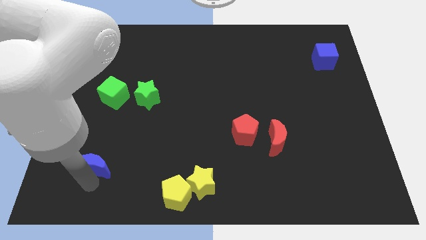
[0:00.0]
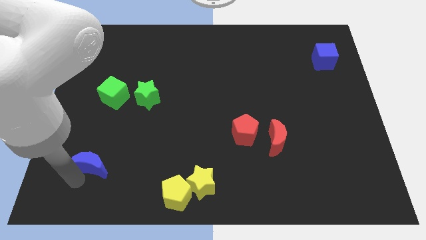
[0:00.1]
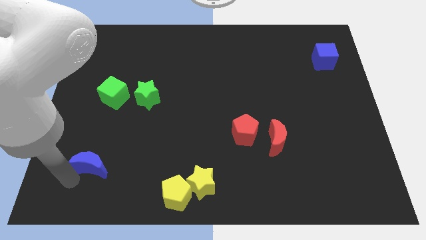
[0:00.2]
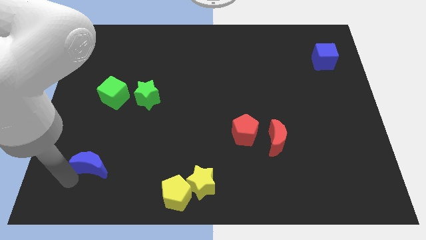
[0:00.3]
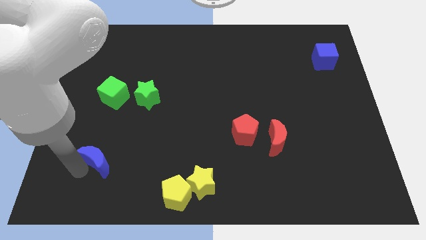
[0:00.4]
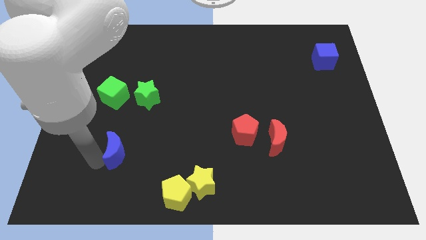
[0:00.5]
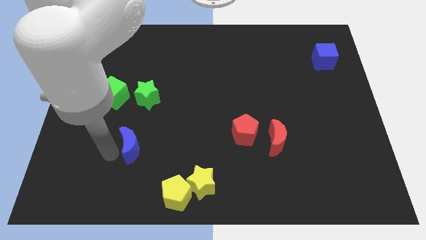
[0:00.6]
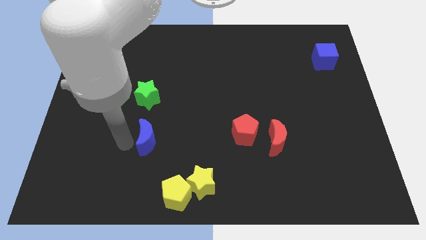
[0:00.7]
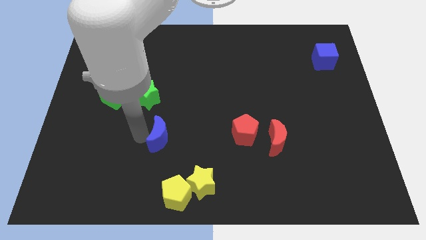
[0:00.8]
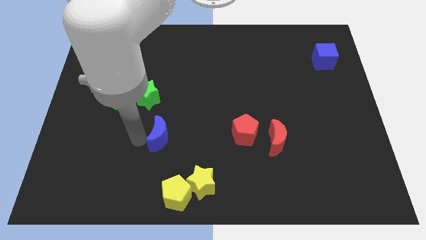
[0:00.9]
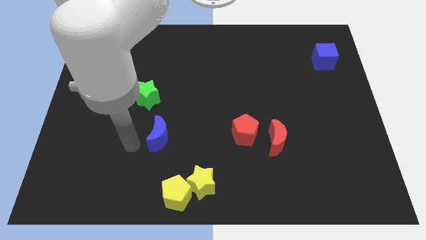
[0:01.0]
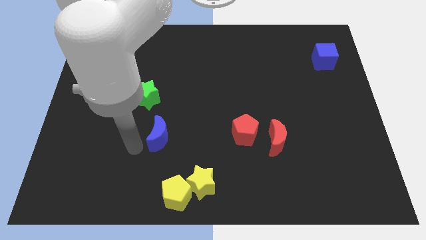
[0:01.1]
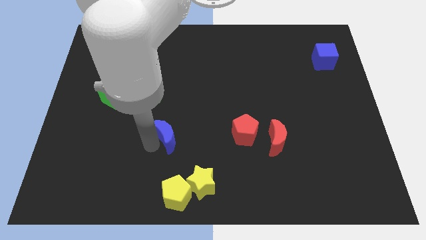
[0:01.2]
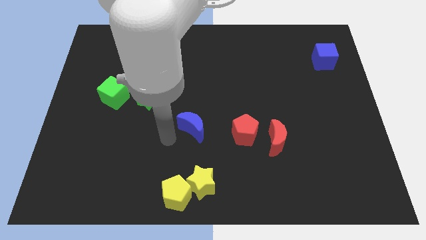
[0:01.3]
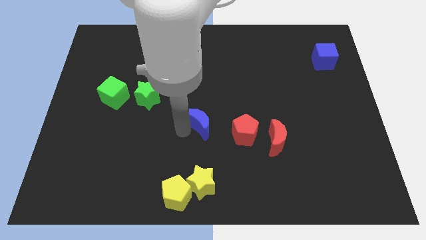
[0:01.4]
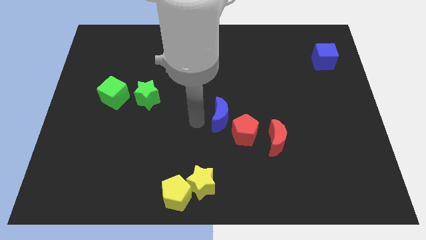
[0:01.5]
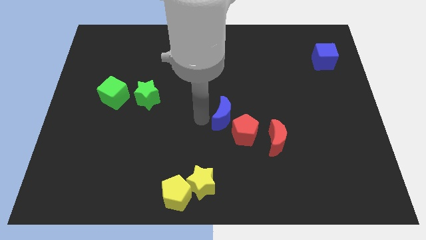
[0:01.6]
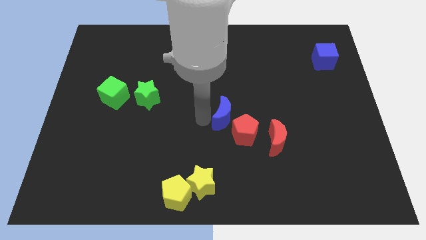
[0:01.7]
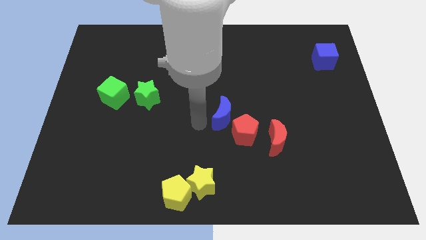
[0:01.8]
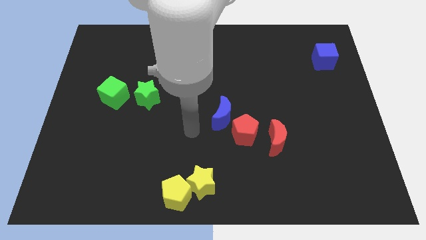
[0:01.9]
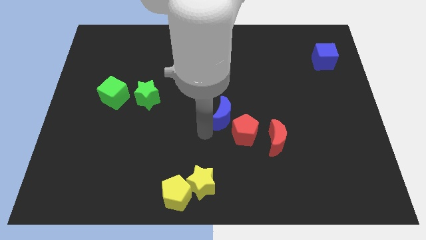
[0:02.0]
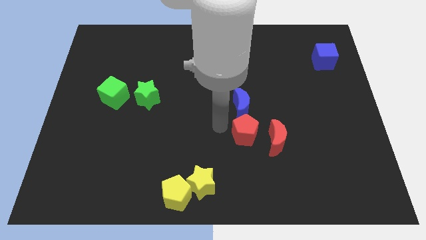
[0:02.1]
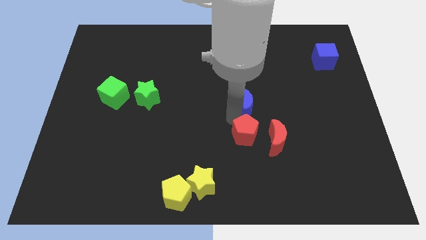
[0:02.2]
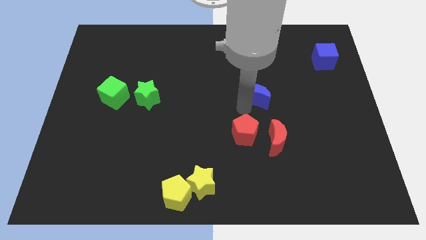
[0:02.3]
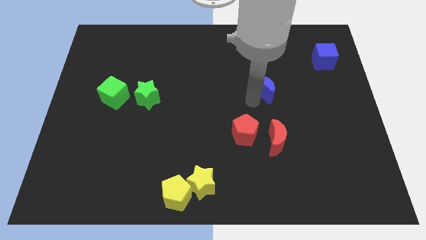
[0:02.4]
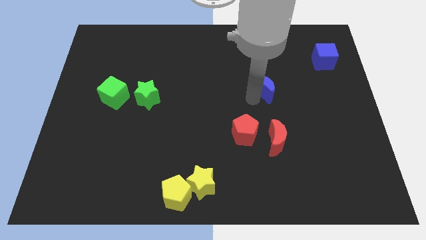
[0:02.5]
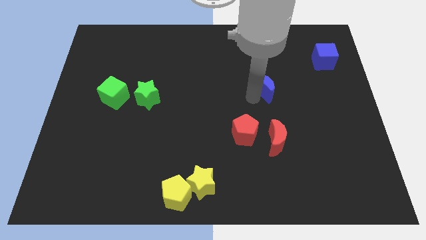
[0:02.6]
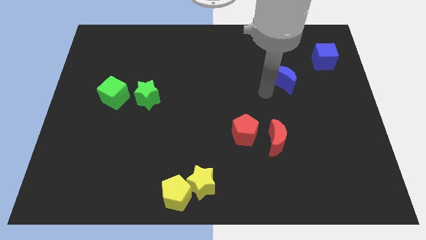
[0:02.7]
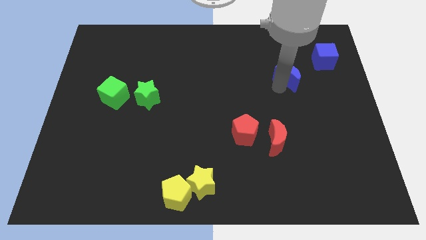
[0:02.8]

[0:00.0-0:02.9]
move blue moon towards blue cube

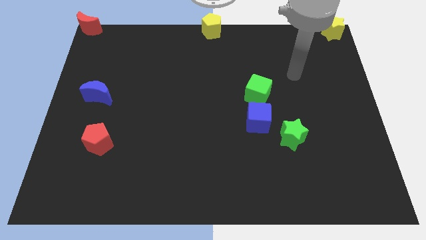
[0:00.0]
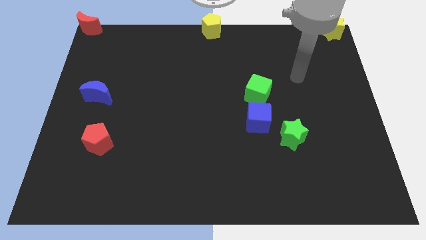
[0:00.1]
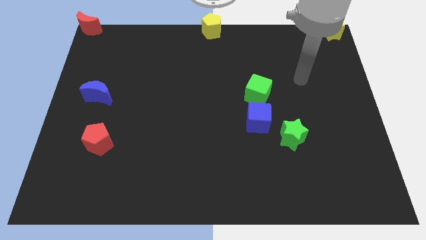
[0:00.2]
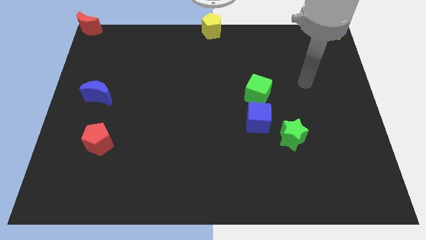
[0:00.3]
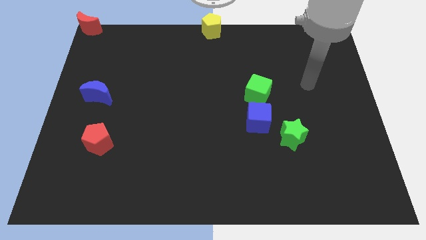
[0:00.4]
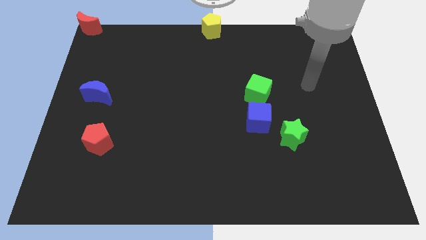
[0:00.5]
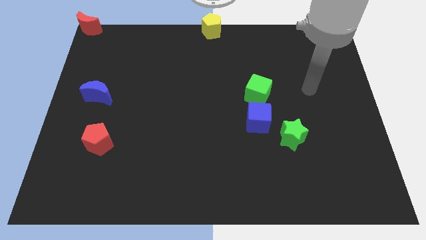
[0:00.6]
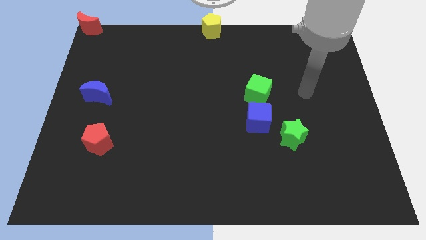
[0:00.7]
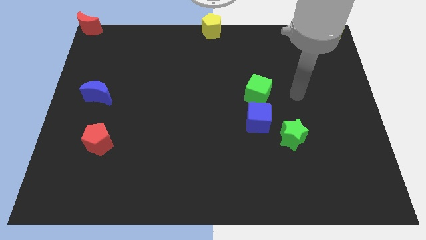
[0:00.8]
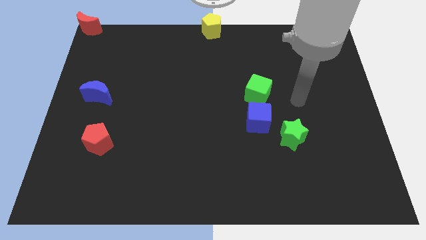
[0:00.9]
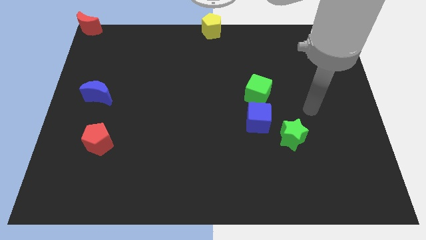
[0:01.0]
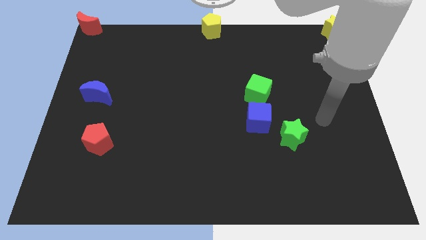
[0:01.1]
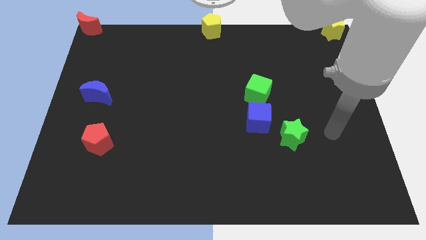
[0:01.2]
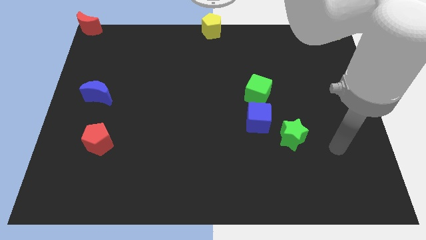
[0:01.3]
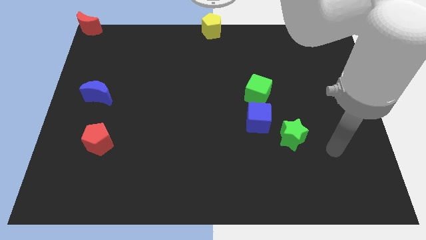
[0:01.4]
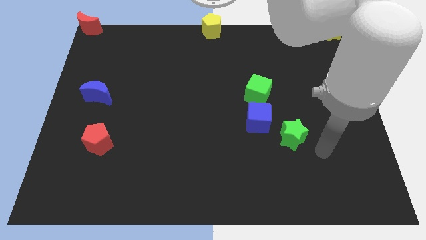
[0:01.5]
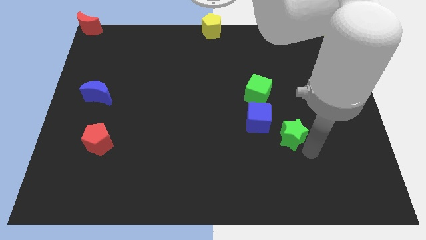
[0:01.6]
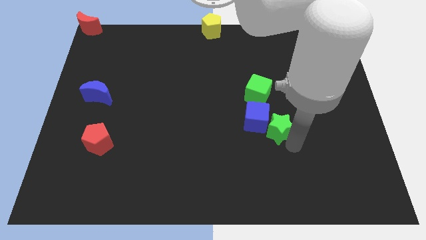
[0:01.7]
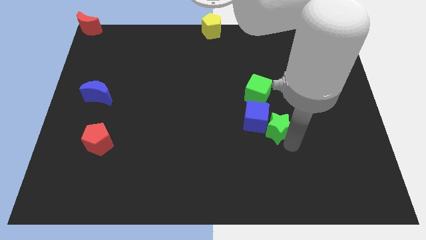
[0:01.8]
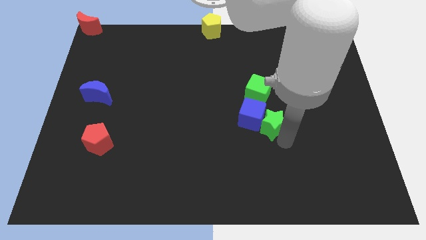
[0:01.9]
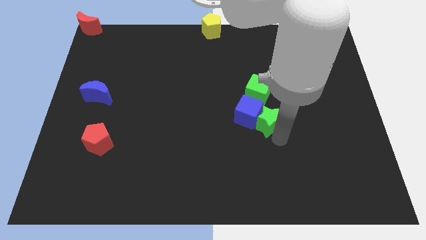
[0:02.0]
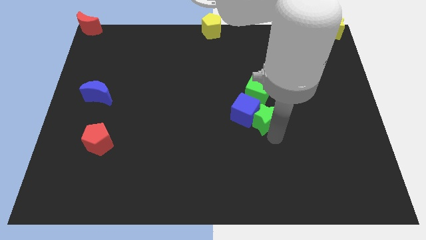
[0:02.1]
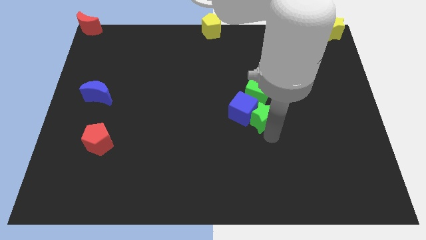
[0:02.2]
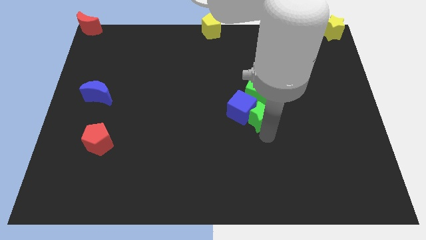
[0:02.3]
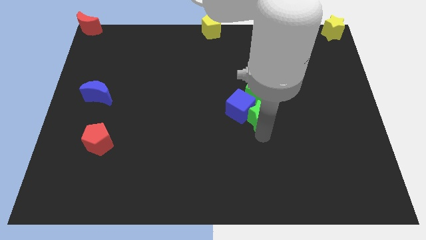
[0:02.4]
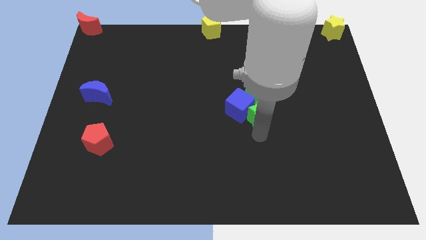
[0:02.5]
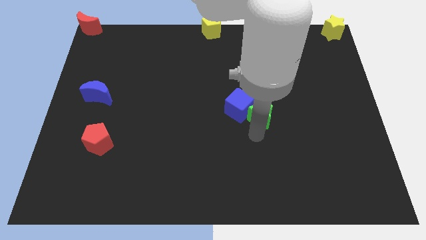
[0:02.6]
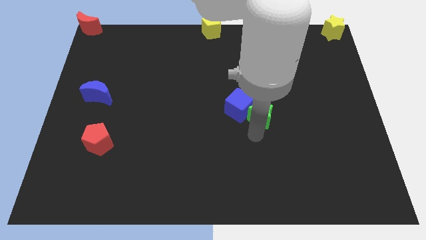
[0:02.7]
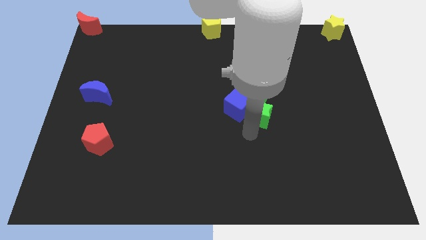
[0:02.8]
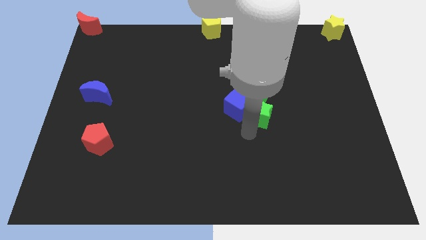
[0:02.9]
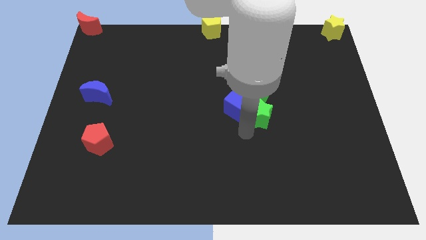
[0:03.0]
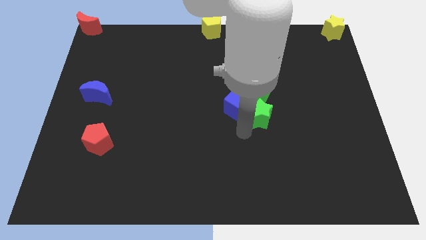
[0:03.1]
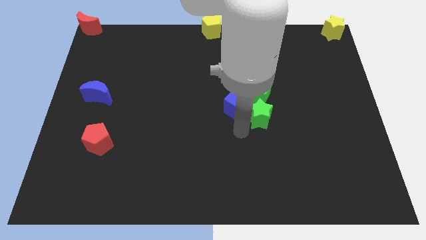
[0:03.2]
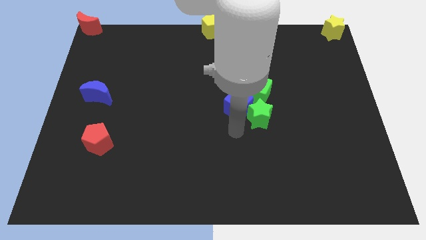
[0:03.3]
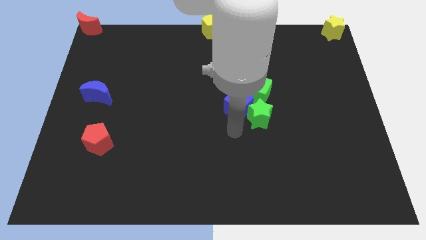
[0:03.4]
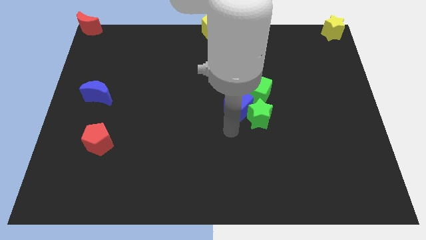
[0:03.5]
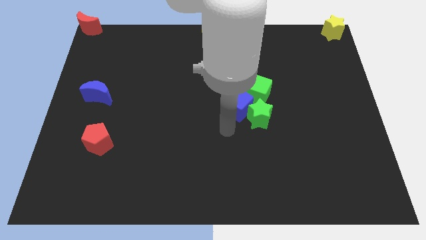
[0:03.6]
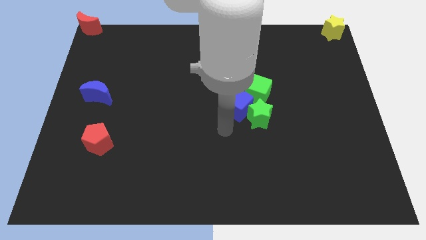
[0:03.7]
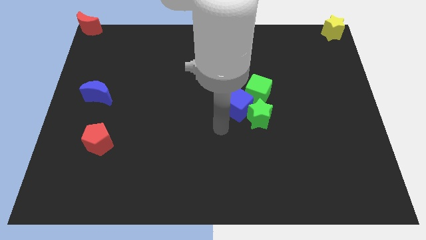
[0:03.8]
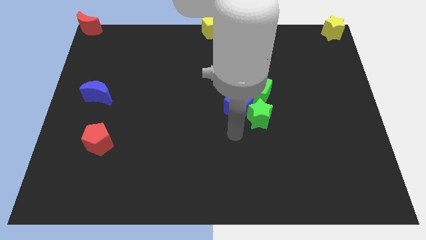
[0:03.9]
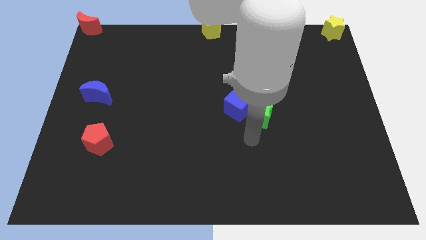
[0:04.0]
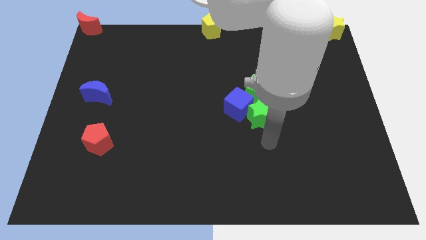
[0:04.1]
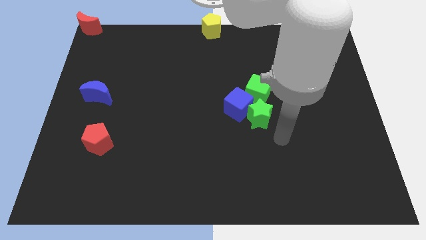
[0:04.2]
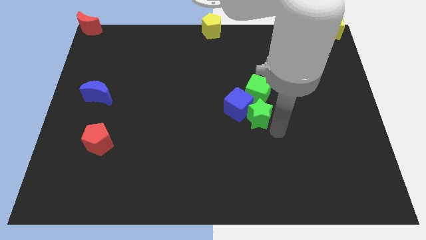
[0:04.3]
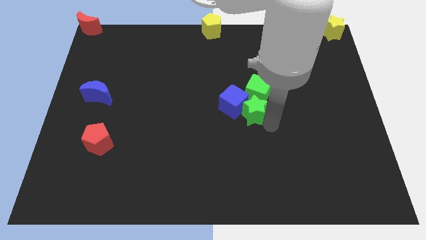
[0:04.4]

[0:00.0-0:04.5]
push the green star to the bottom of the green cube

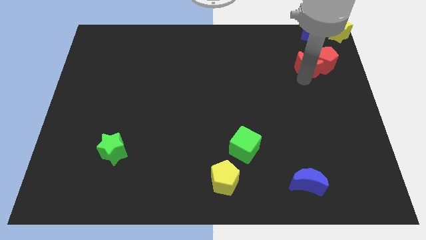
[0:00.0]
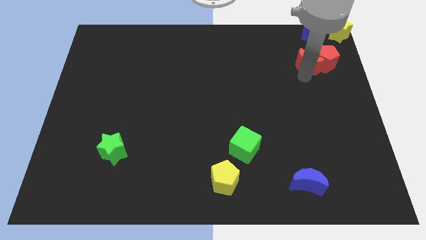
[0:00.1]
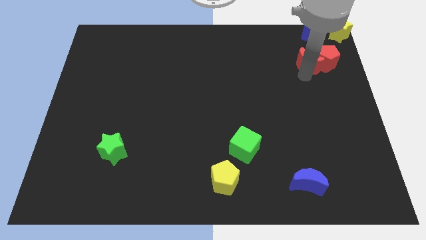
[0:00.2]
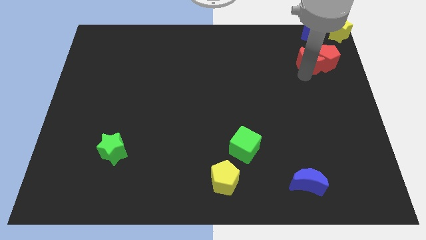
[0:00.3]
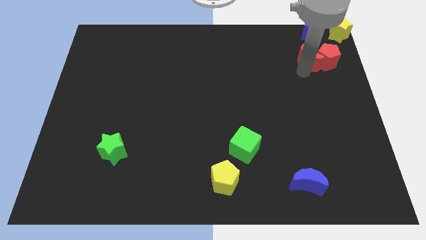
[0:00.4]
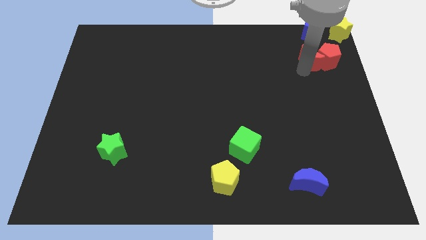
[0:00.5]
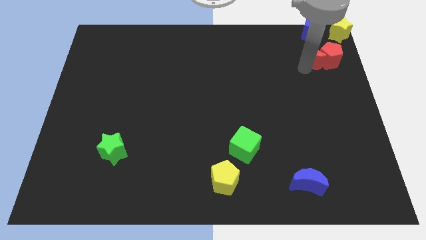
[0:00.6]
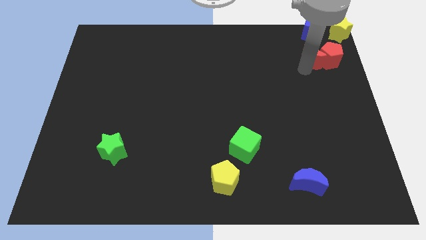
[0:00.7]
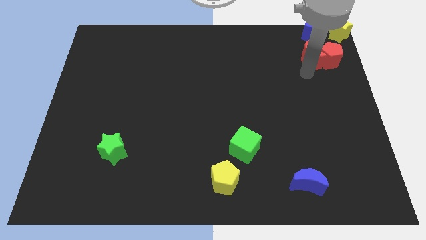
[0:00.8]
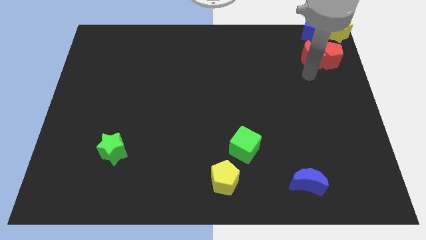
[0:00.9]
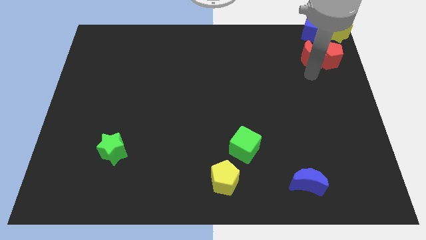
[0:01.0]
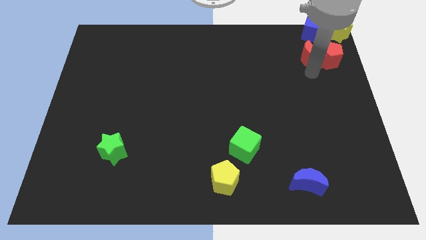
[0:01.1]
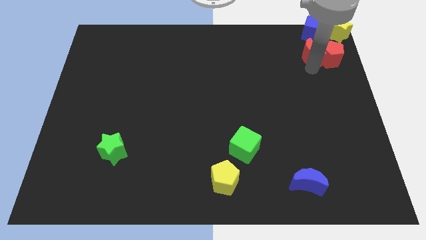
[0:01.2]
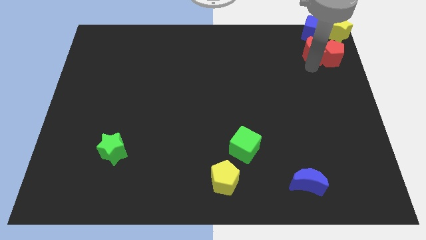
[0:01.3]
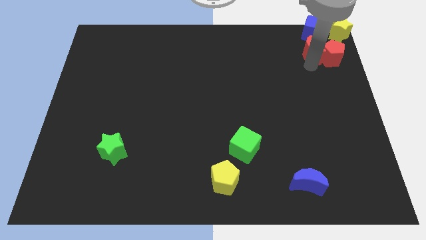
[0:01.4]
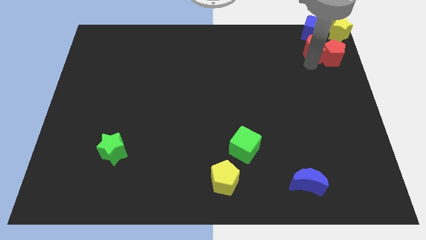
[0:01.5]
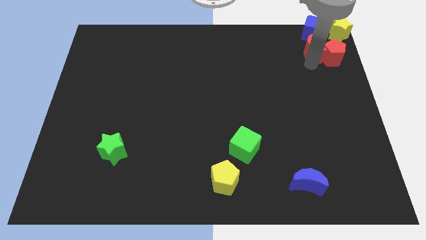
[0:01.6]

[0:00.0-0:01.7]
reposition both red objects
